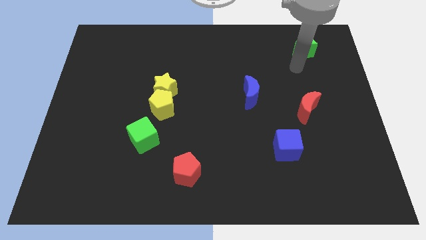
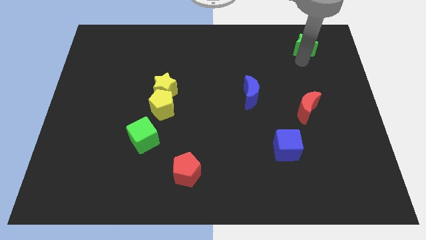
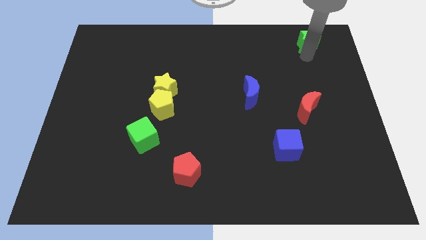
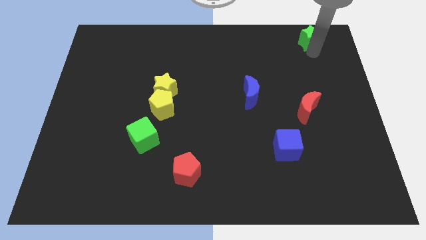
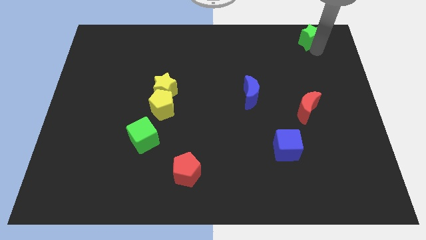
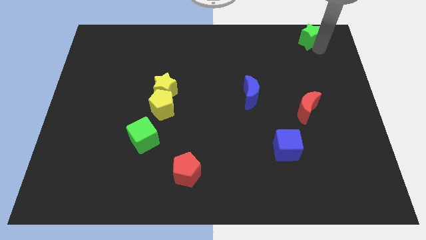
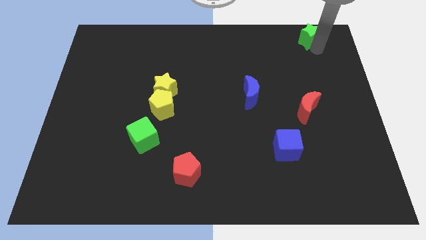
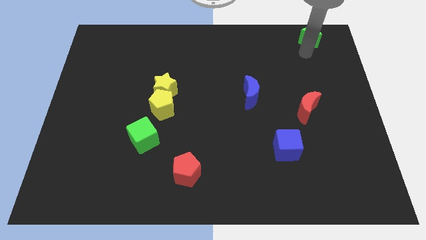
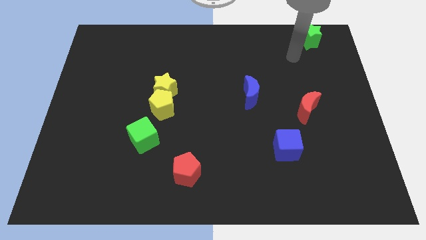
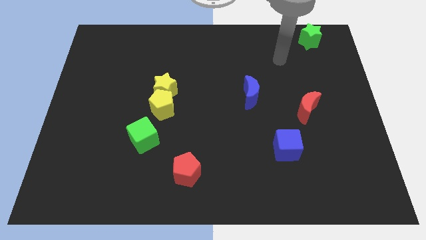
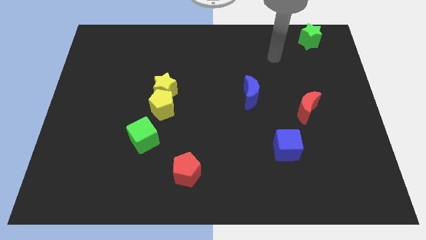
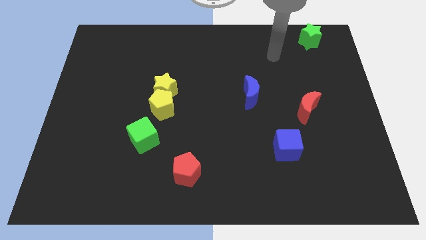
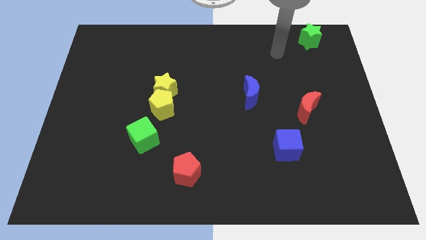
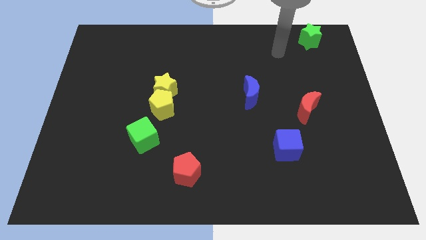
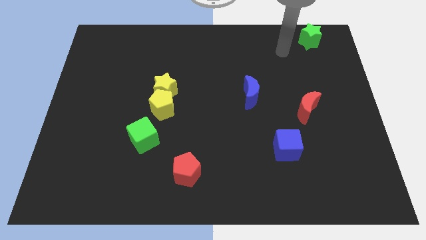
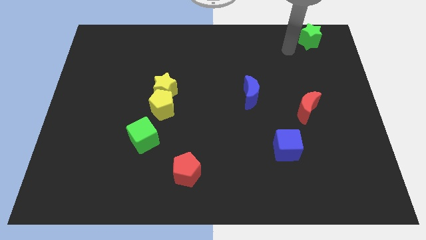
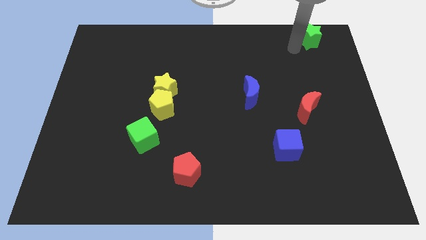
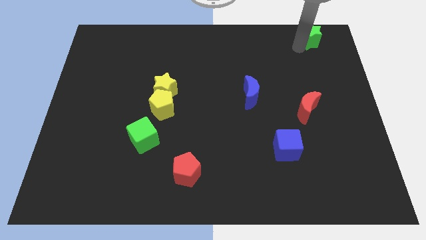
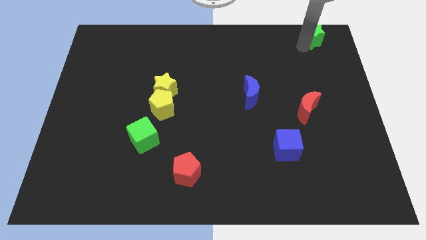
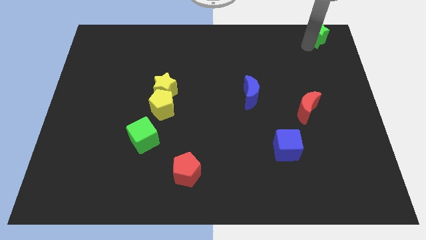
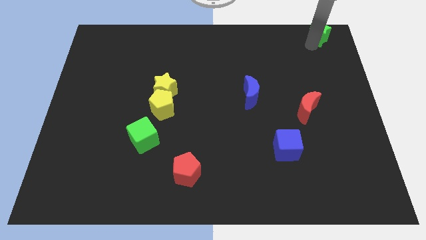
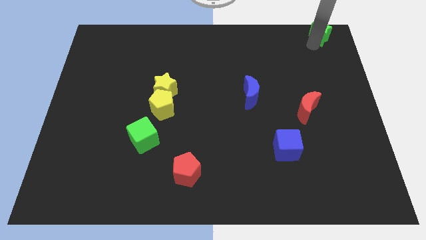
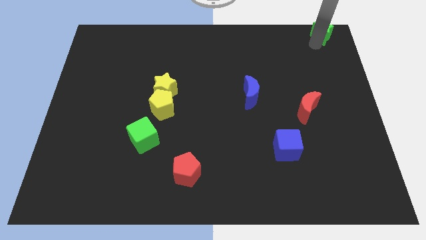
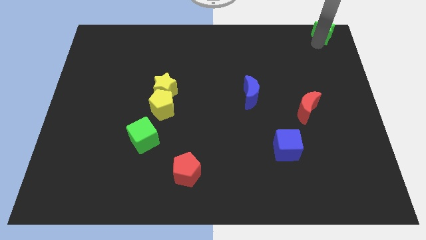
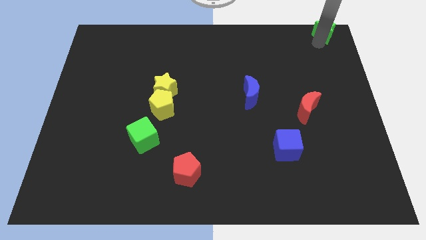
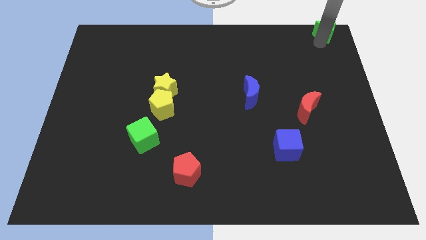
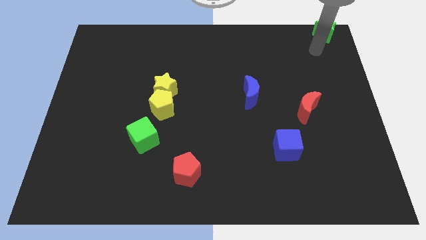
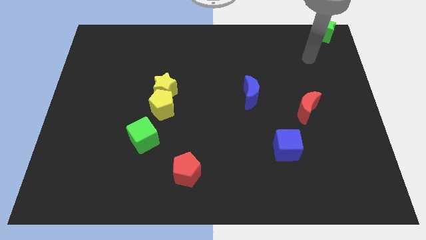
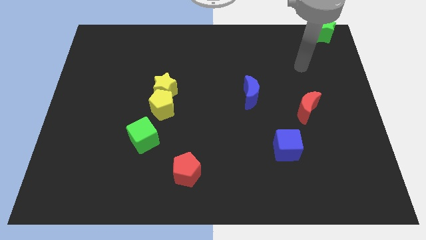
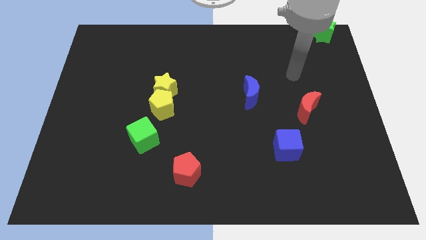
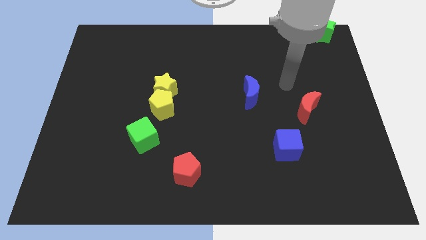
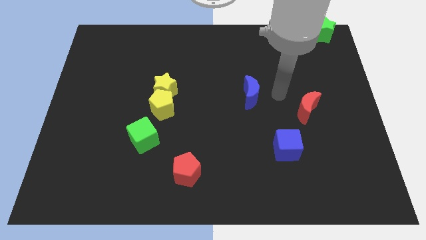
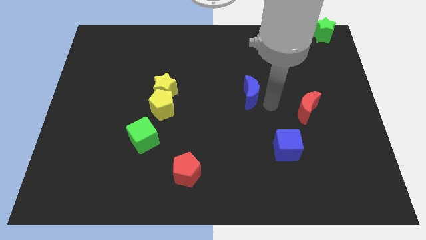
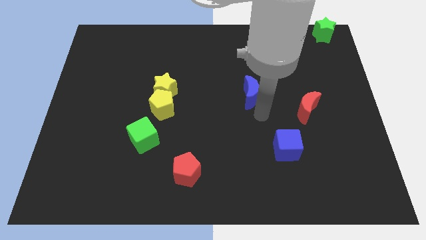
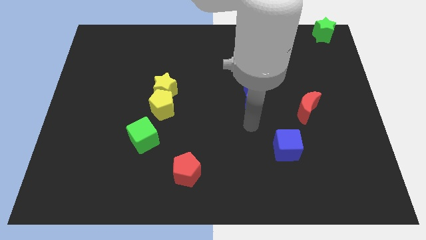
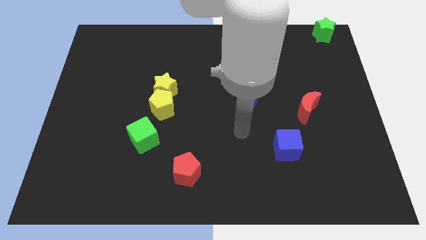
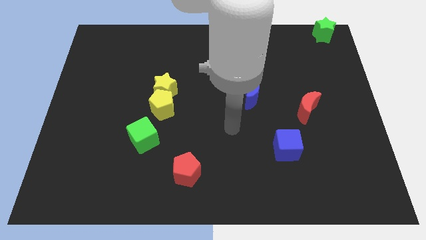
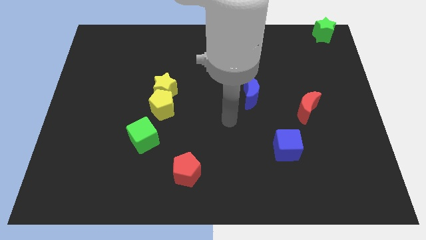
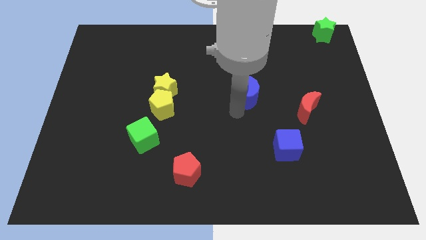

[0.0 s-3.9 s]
place the green star diagonally above the blue crescent

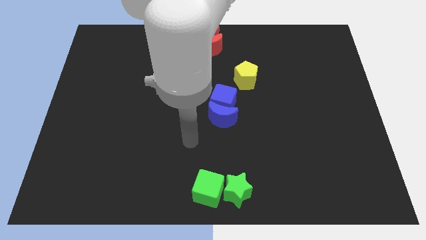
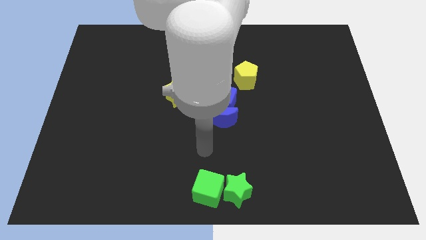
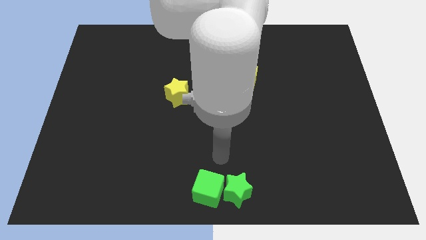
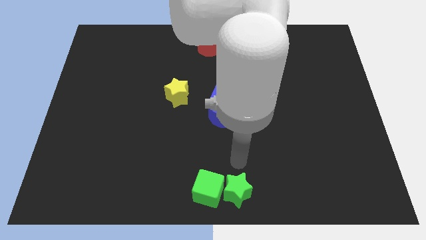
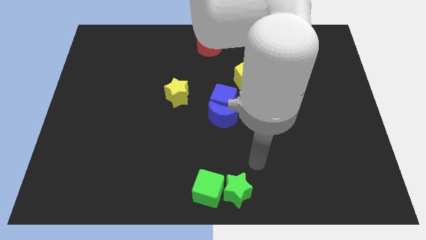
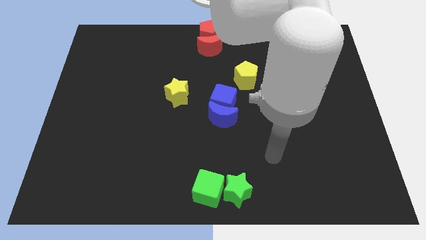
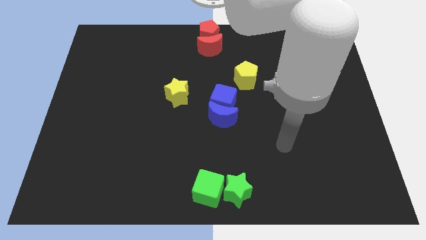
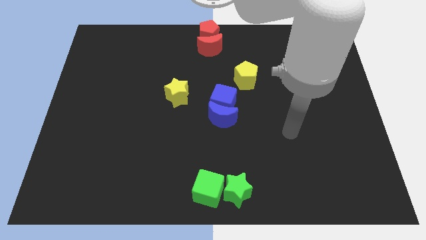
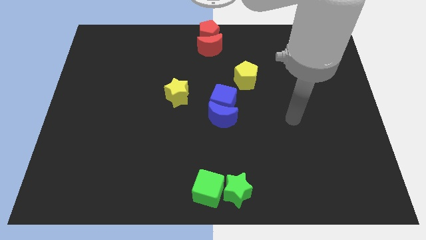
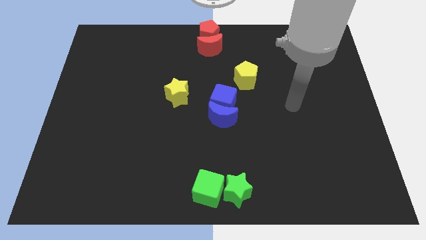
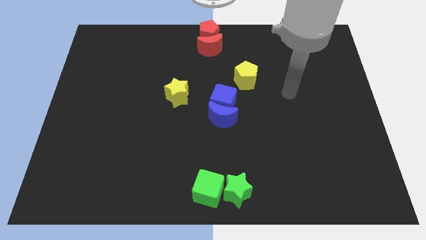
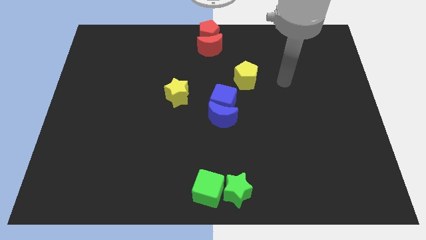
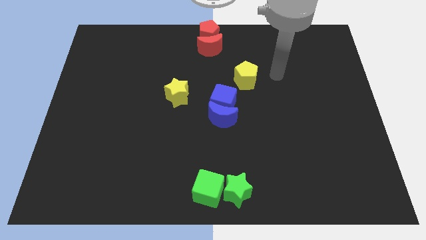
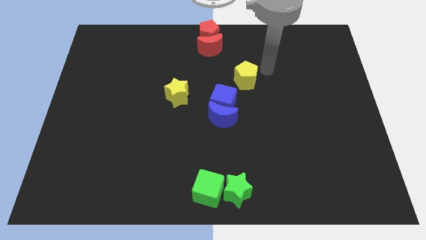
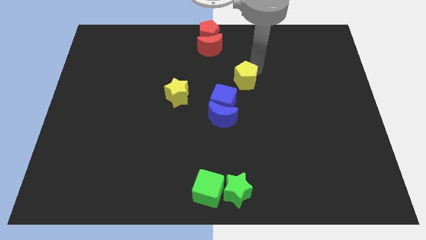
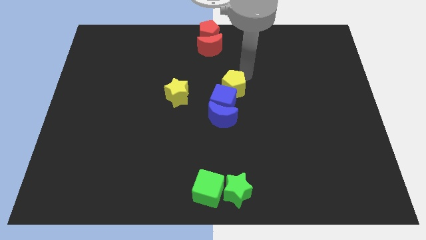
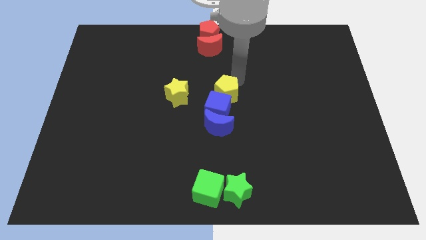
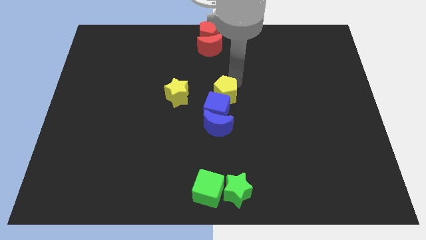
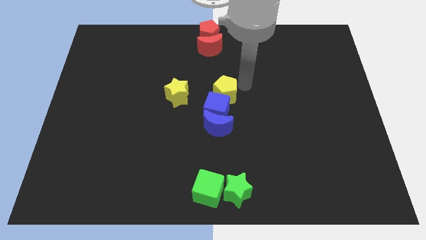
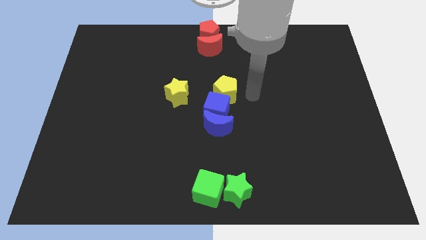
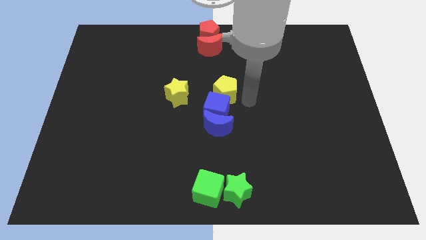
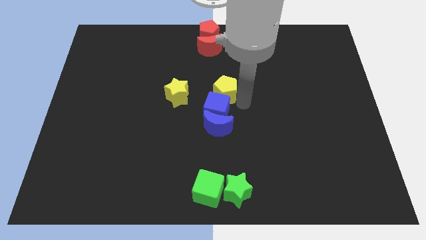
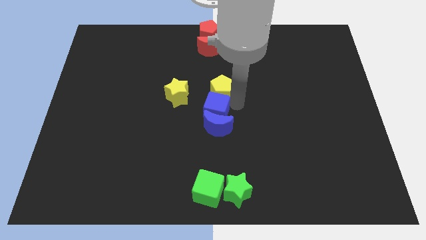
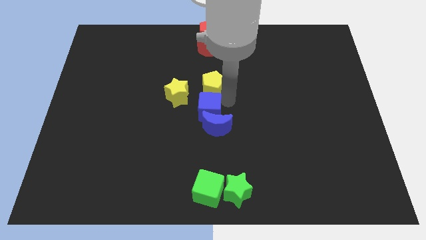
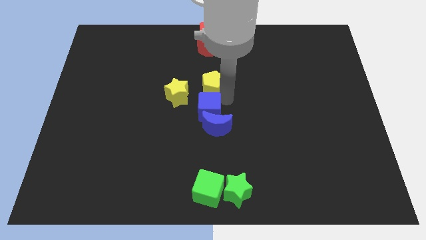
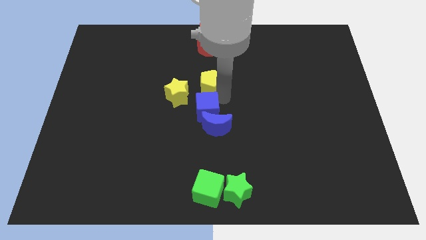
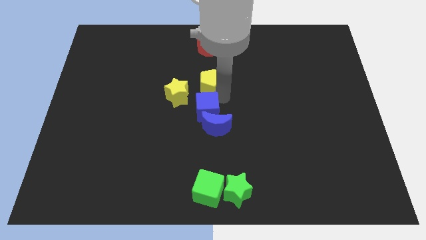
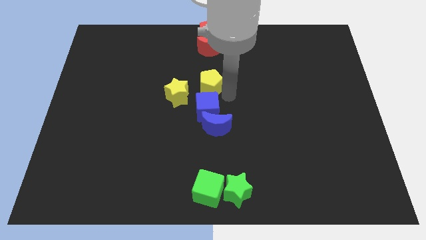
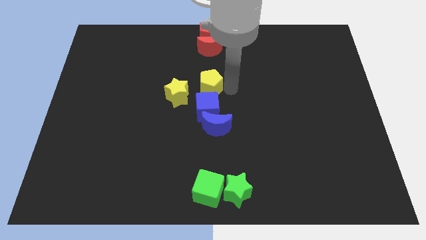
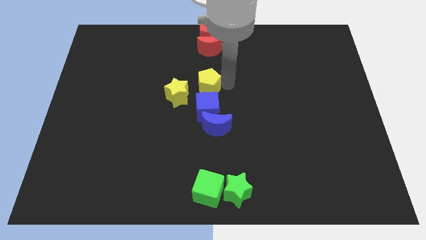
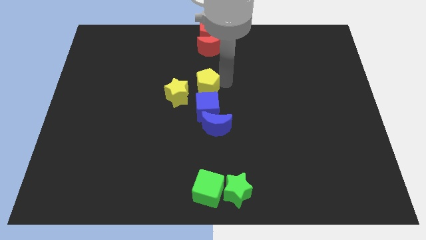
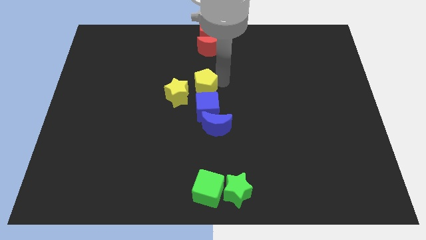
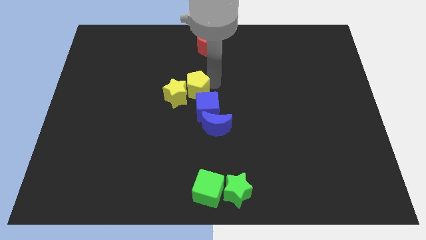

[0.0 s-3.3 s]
push the yellow pentagon into the blue cube

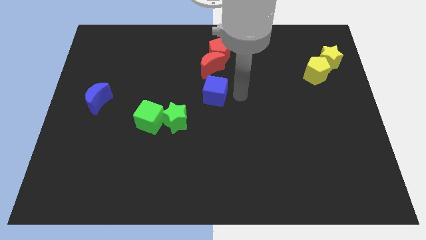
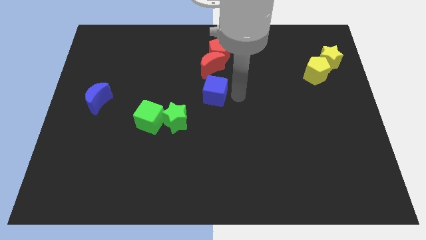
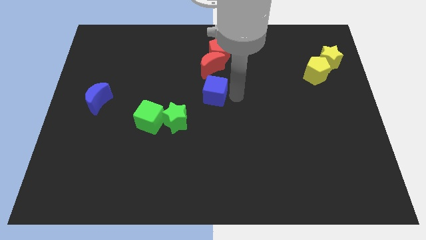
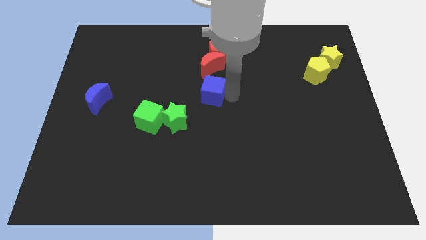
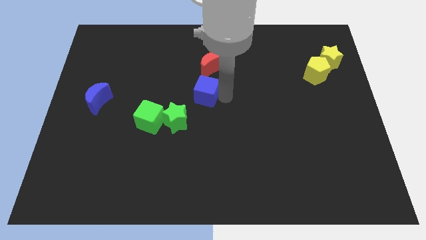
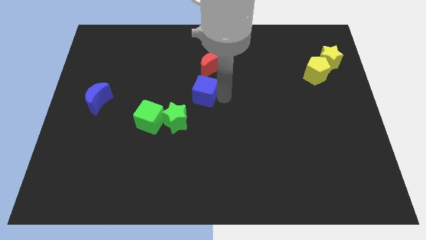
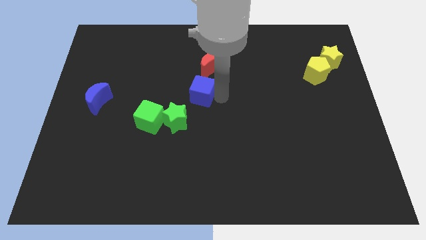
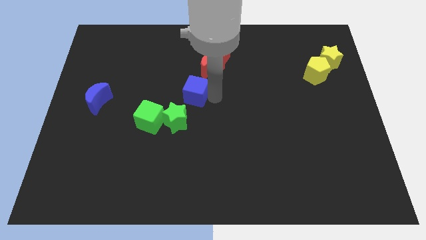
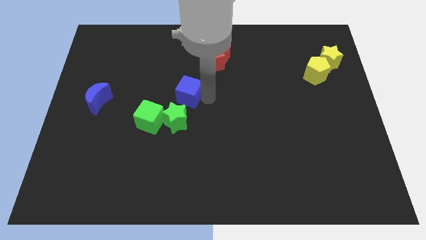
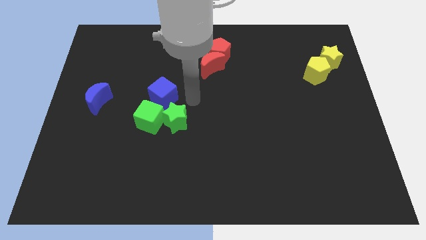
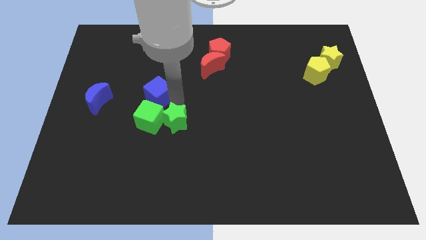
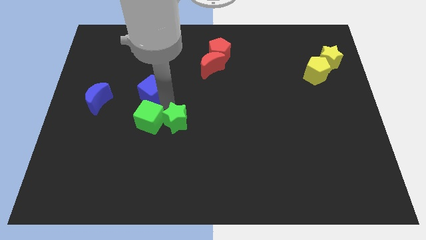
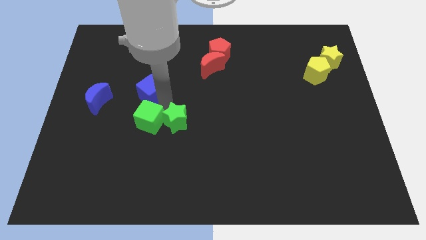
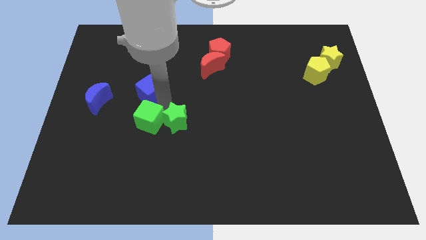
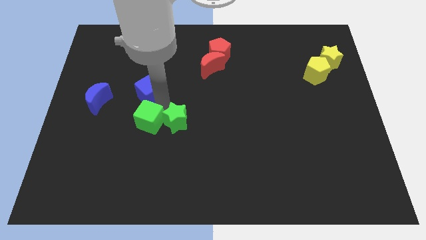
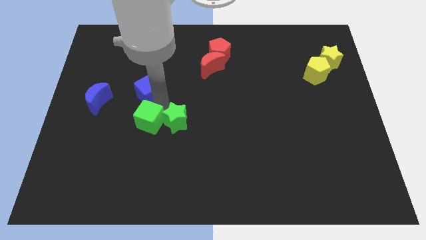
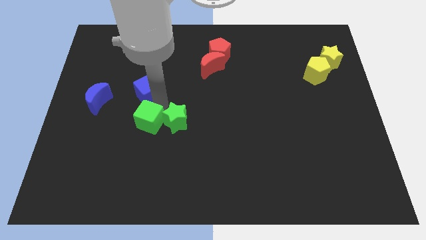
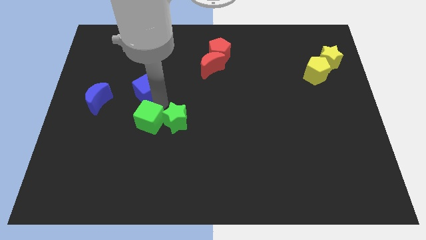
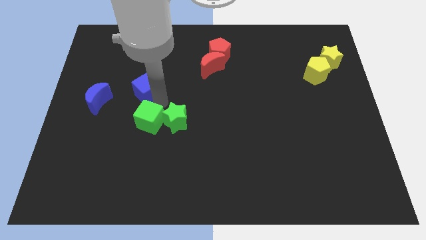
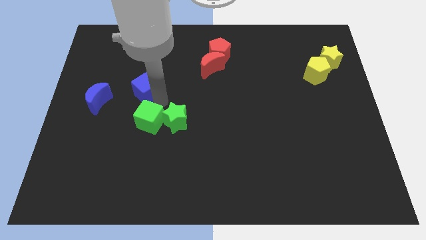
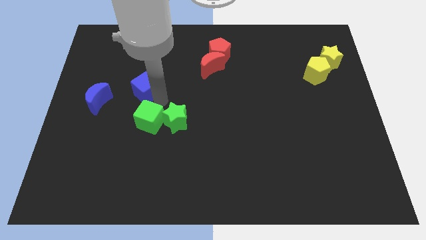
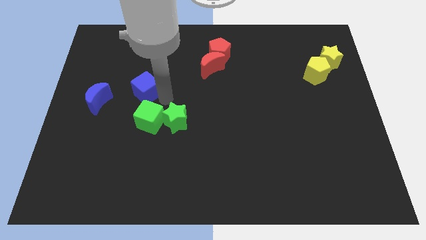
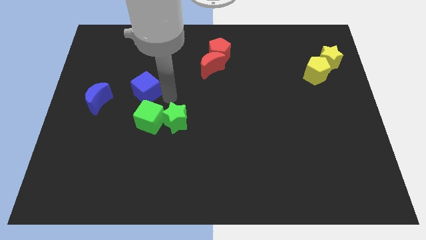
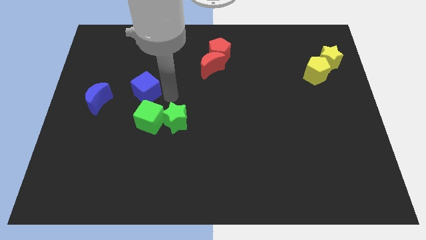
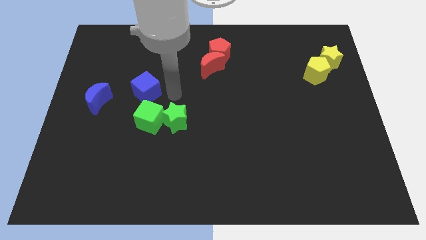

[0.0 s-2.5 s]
move the blue cube above the green cube
